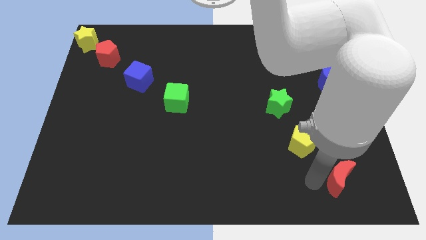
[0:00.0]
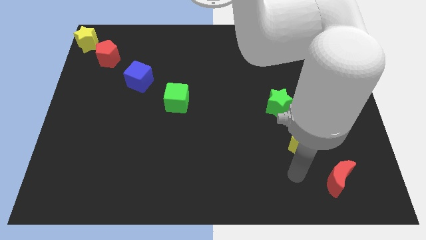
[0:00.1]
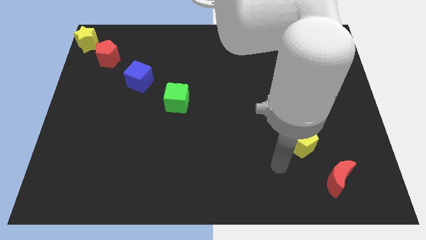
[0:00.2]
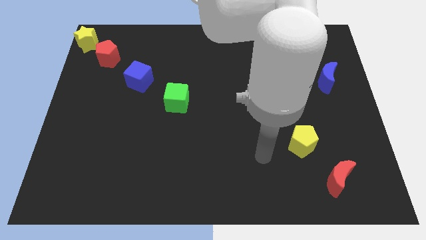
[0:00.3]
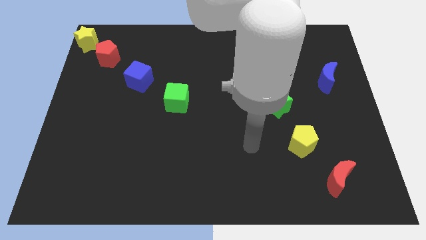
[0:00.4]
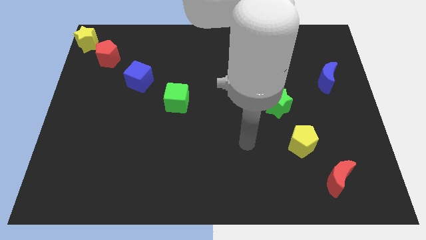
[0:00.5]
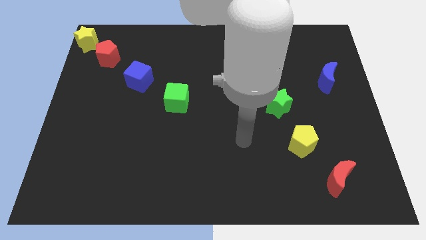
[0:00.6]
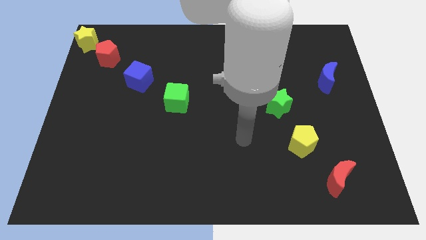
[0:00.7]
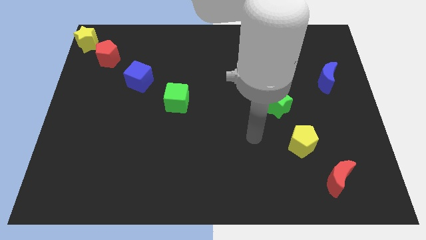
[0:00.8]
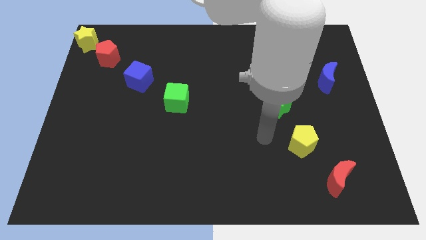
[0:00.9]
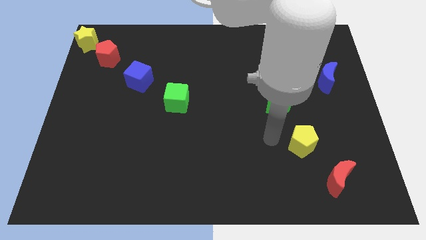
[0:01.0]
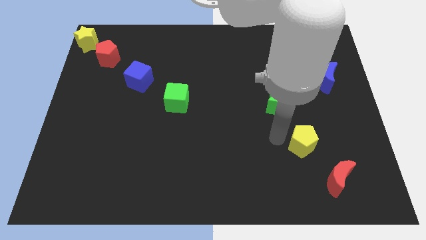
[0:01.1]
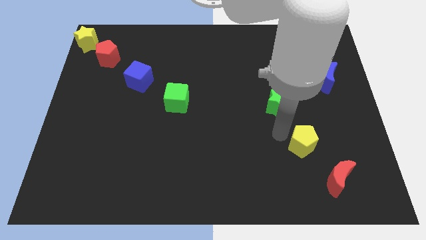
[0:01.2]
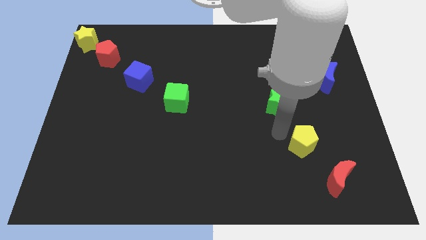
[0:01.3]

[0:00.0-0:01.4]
point your arm at the left of the yellow pentagon

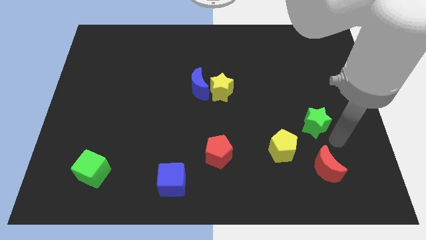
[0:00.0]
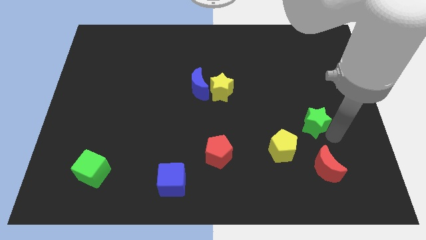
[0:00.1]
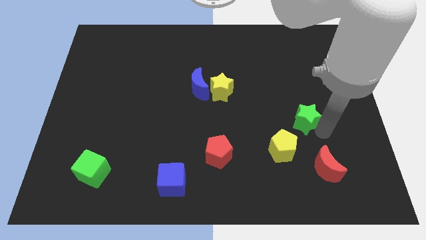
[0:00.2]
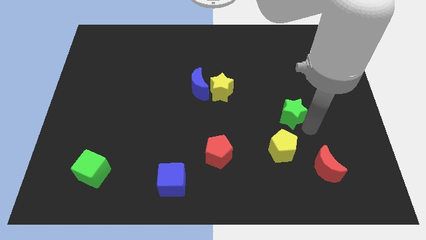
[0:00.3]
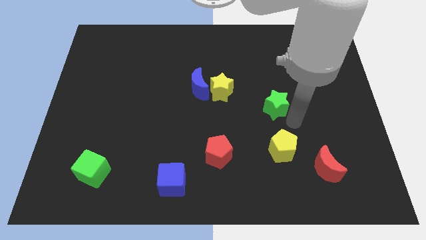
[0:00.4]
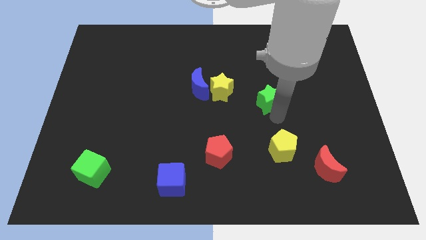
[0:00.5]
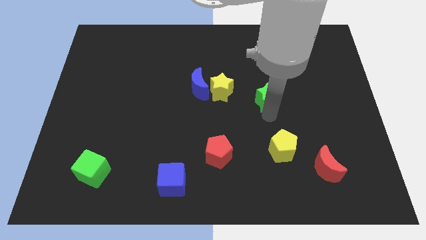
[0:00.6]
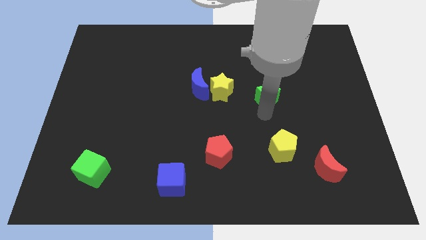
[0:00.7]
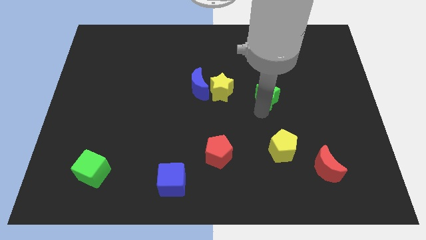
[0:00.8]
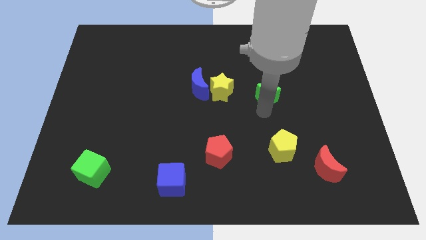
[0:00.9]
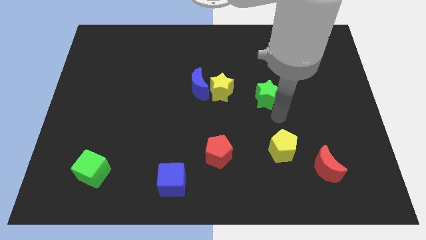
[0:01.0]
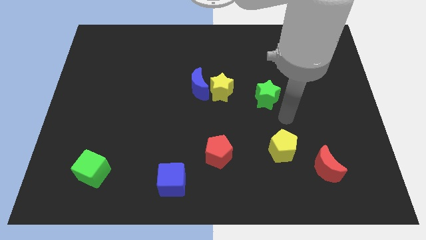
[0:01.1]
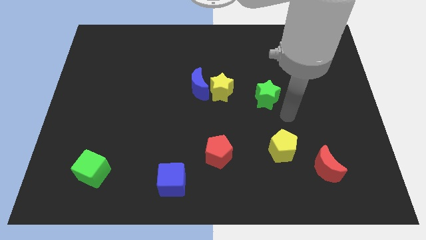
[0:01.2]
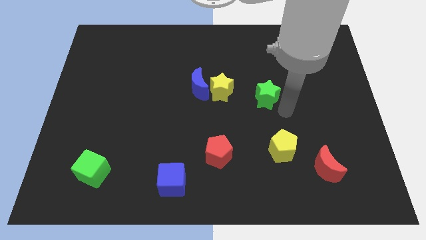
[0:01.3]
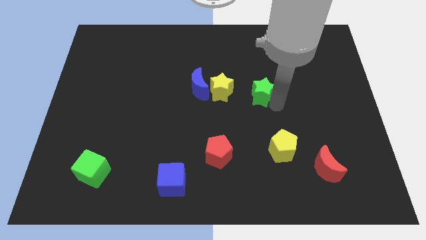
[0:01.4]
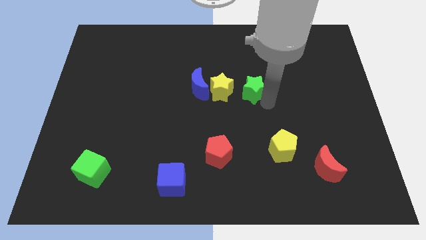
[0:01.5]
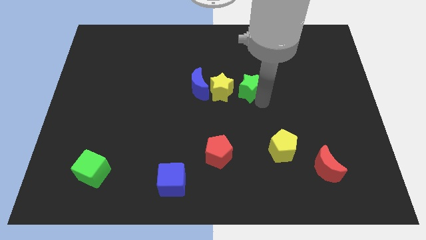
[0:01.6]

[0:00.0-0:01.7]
place the green star to the right side of yellow star

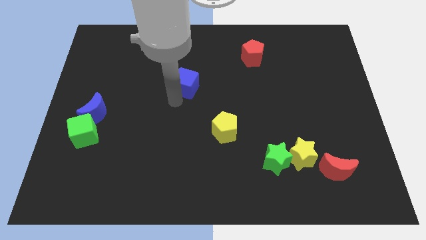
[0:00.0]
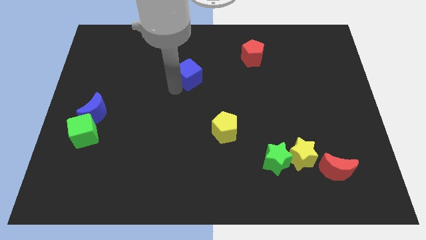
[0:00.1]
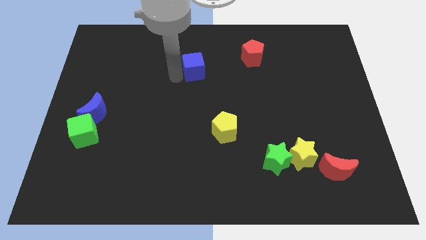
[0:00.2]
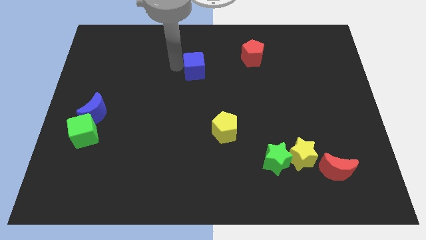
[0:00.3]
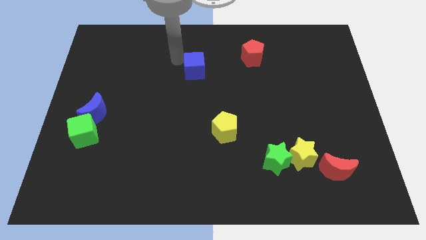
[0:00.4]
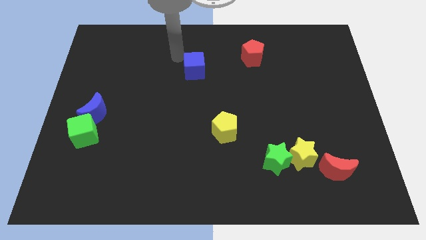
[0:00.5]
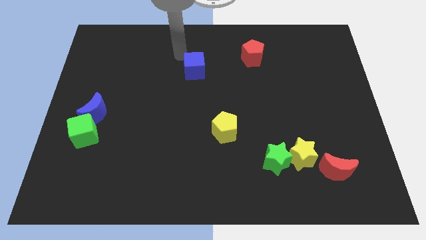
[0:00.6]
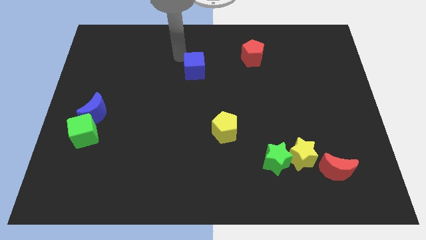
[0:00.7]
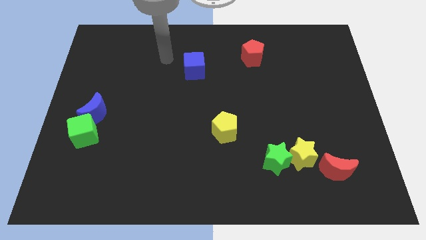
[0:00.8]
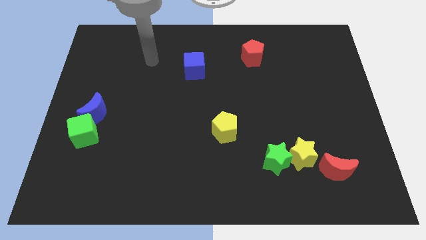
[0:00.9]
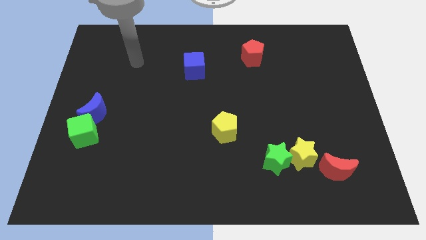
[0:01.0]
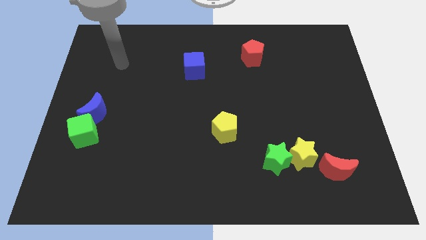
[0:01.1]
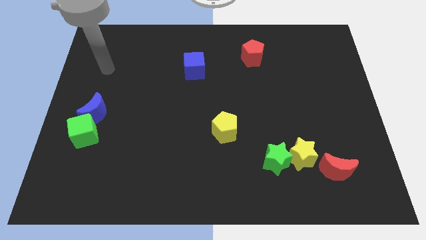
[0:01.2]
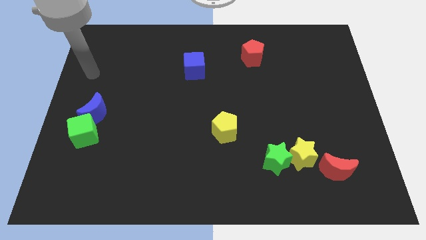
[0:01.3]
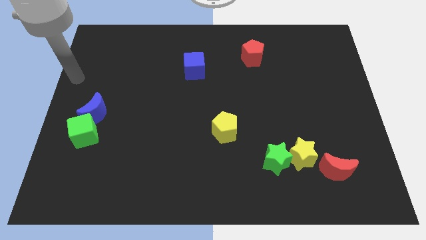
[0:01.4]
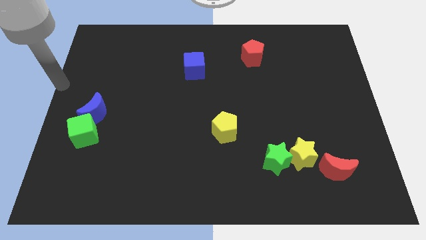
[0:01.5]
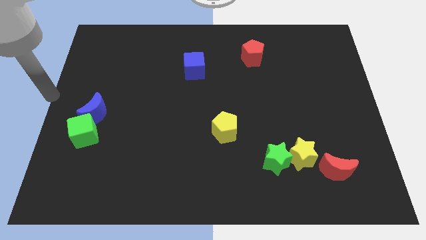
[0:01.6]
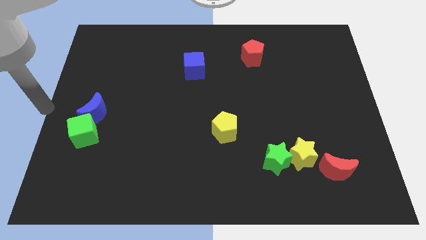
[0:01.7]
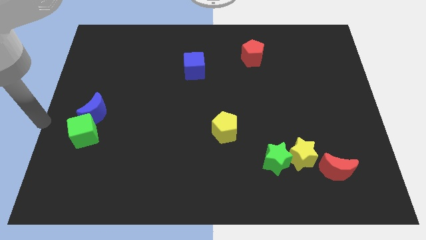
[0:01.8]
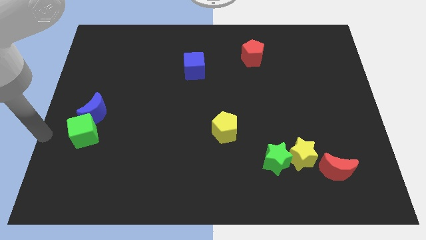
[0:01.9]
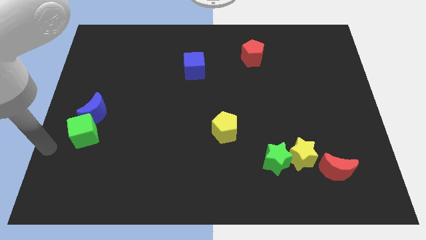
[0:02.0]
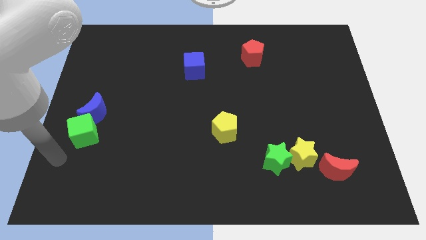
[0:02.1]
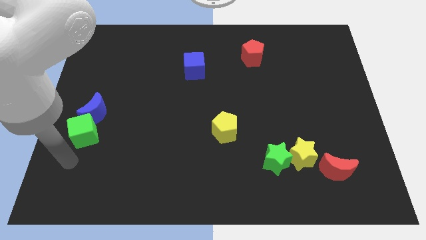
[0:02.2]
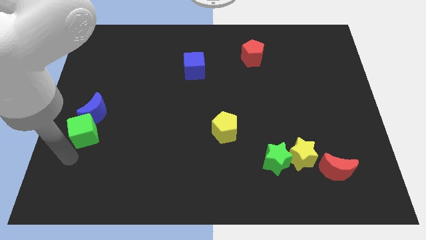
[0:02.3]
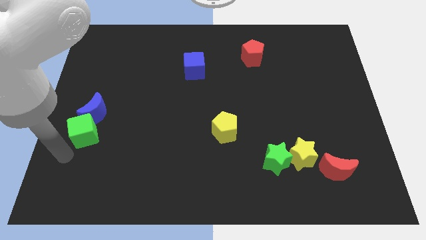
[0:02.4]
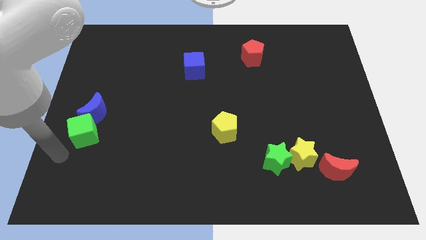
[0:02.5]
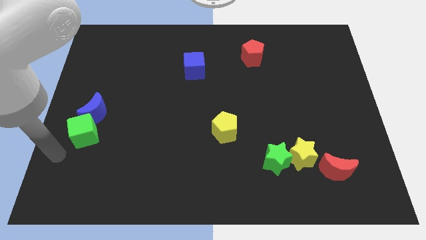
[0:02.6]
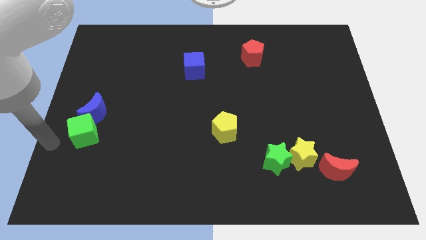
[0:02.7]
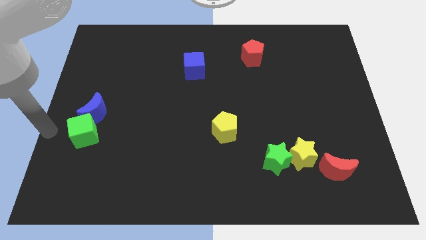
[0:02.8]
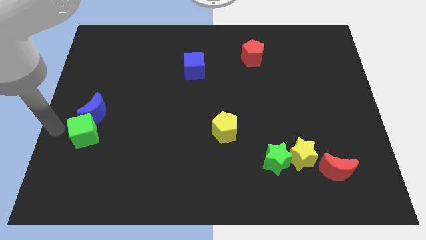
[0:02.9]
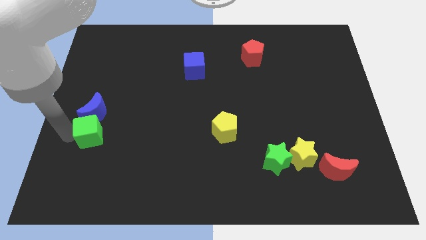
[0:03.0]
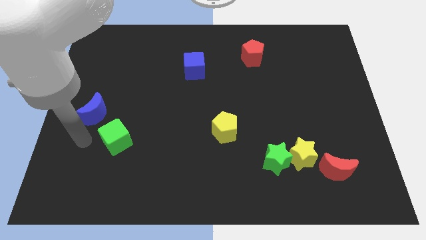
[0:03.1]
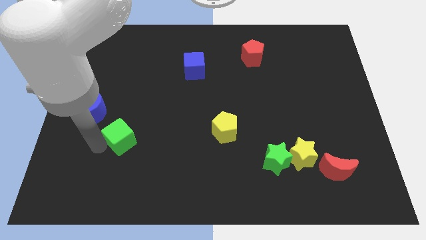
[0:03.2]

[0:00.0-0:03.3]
separate the green cube and blue moon

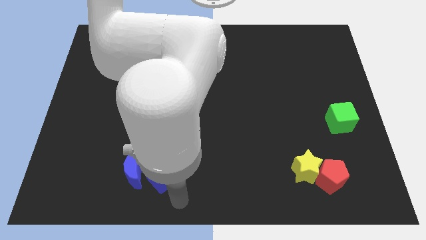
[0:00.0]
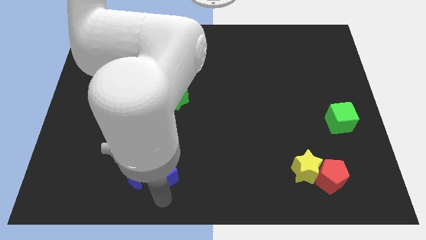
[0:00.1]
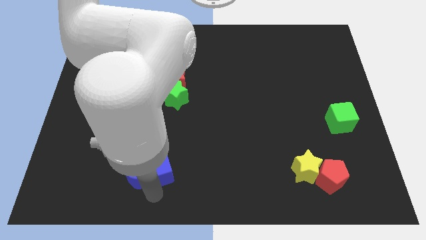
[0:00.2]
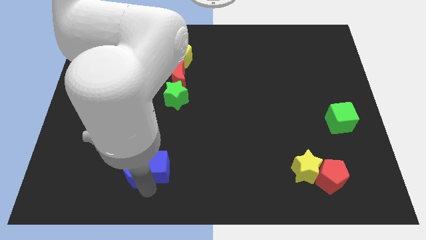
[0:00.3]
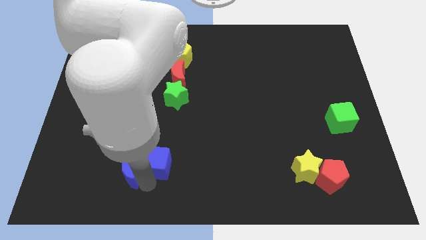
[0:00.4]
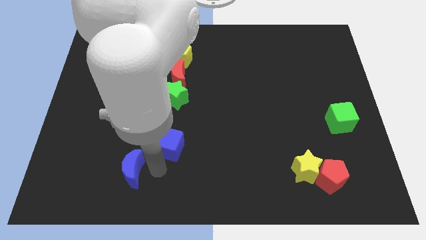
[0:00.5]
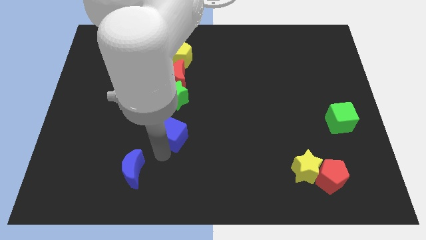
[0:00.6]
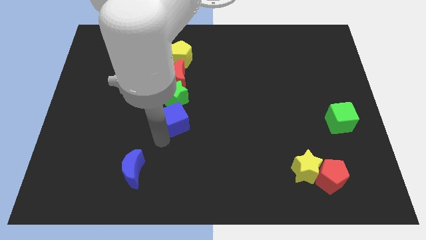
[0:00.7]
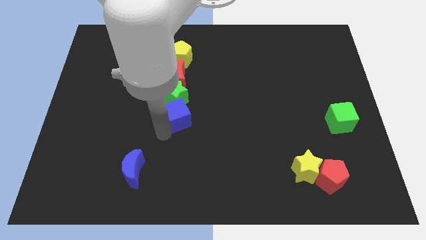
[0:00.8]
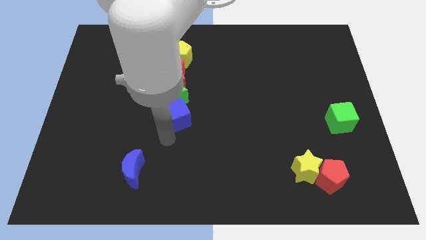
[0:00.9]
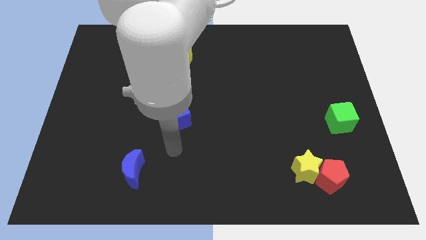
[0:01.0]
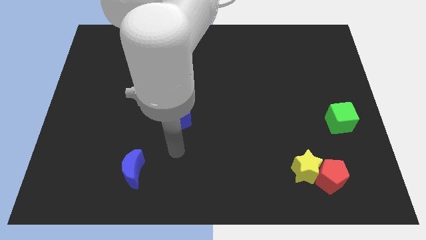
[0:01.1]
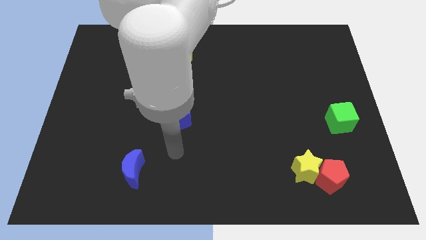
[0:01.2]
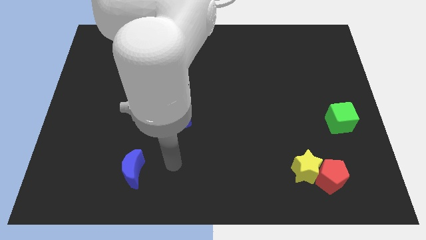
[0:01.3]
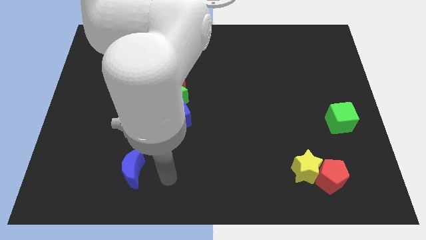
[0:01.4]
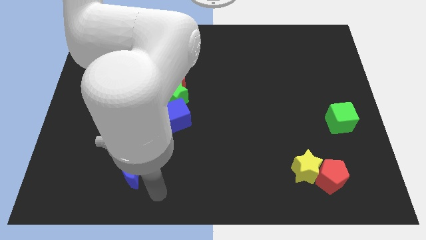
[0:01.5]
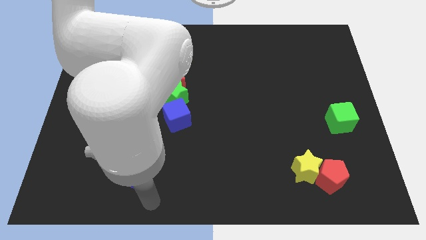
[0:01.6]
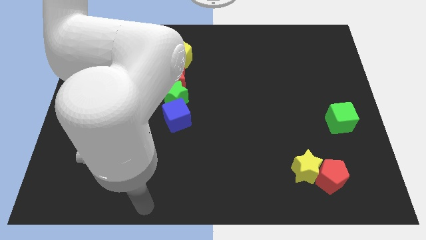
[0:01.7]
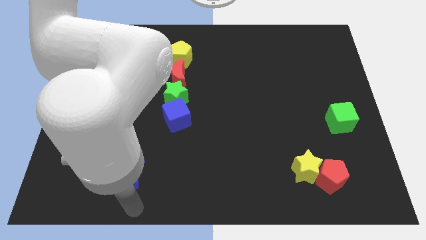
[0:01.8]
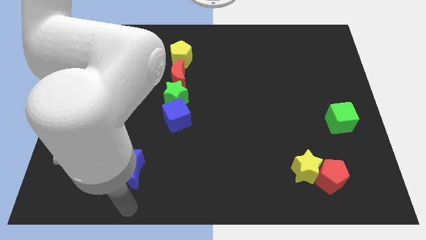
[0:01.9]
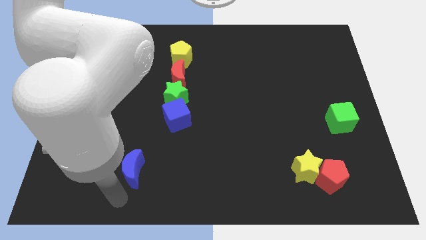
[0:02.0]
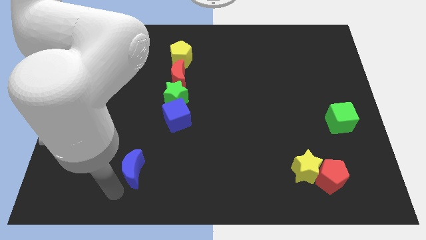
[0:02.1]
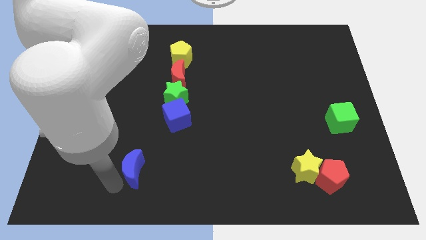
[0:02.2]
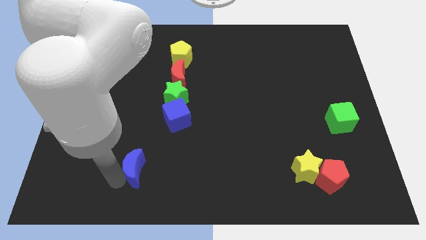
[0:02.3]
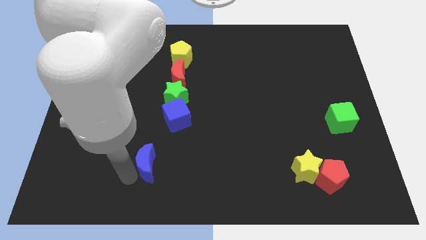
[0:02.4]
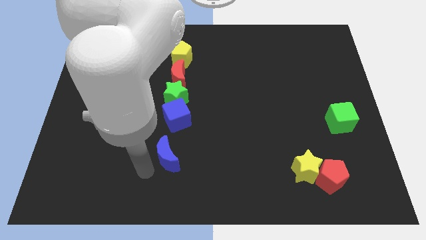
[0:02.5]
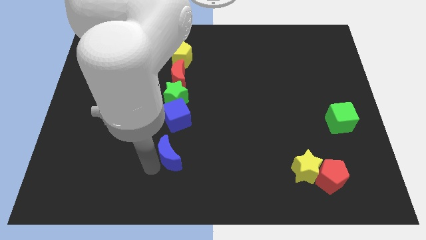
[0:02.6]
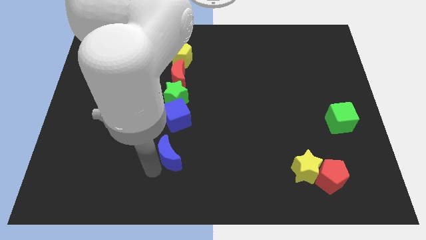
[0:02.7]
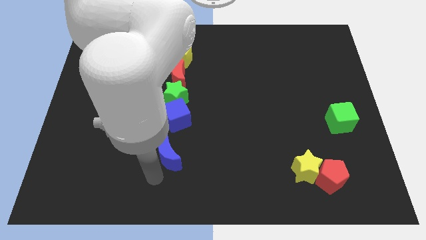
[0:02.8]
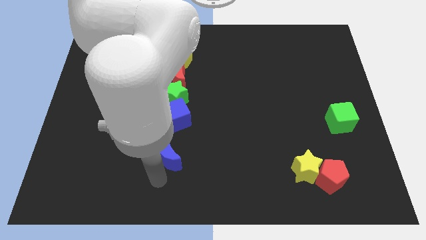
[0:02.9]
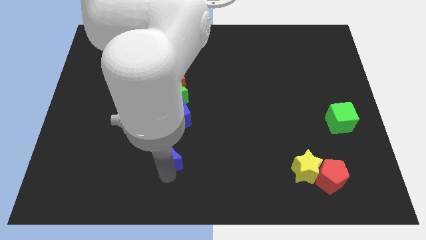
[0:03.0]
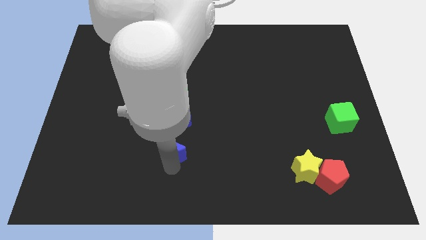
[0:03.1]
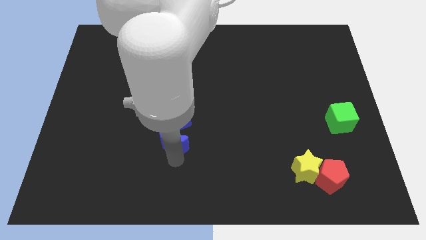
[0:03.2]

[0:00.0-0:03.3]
push the blue moon towards the blue cube
